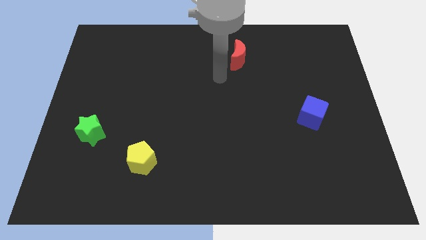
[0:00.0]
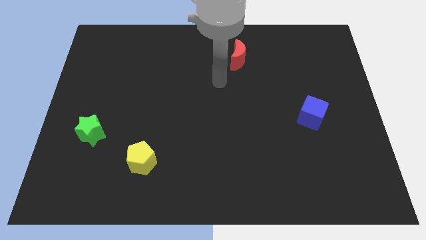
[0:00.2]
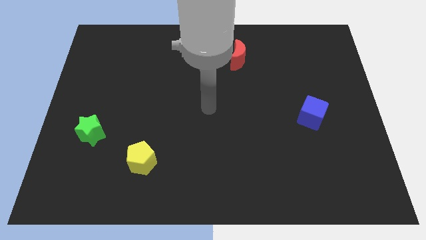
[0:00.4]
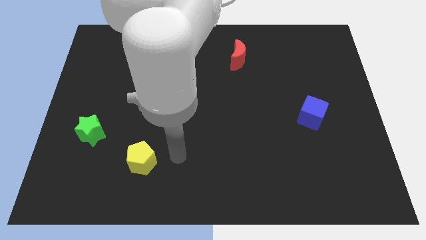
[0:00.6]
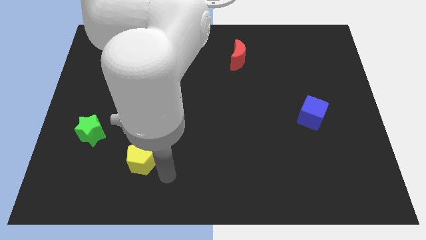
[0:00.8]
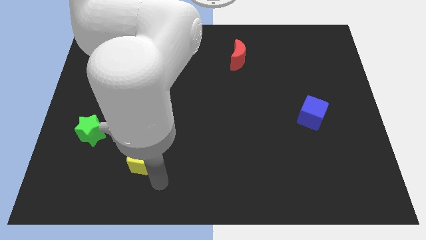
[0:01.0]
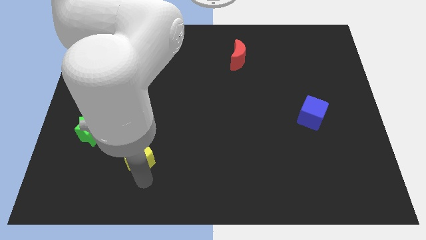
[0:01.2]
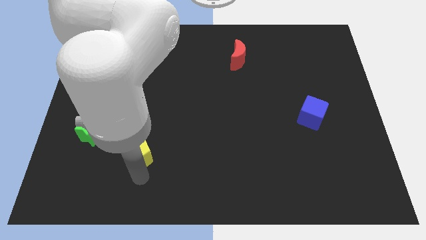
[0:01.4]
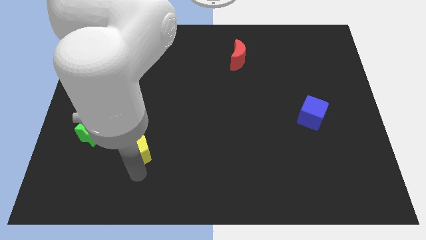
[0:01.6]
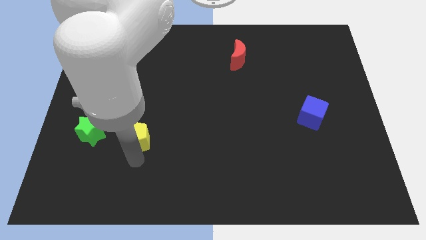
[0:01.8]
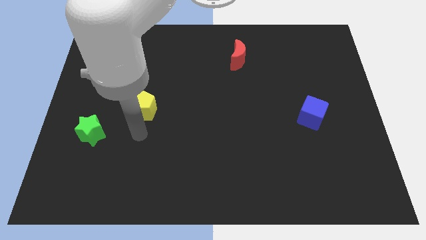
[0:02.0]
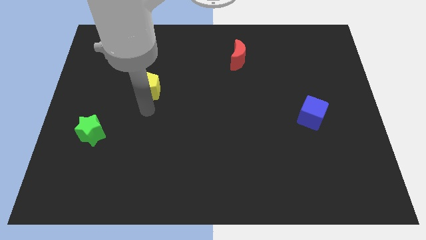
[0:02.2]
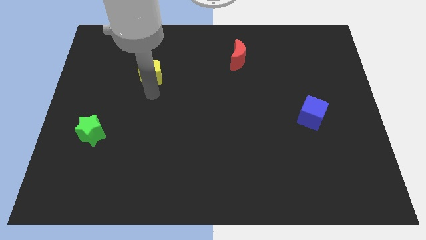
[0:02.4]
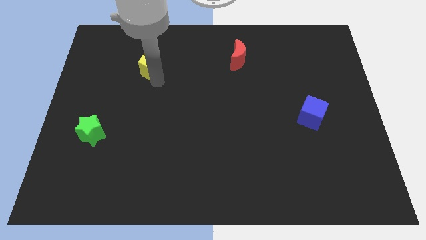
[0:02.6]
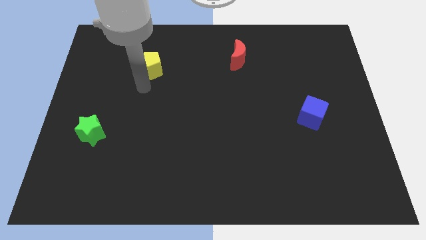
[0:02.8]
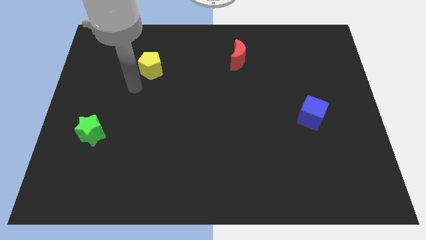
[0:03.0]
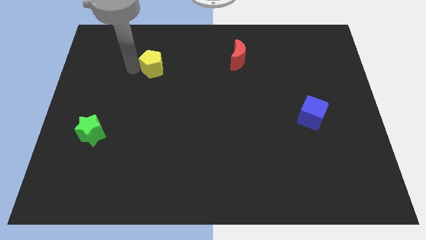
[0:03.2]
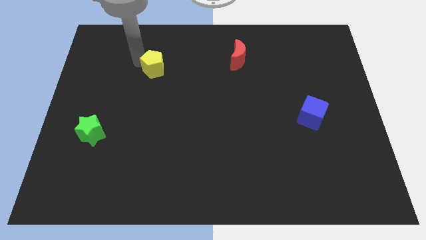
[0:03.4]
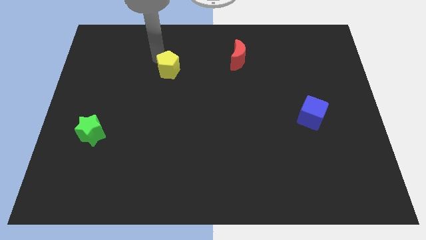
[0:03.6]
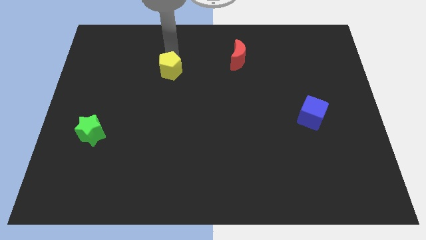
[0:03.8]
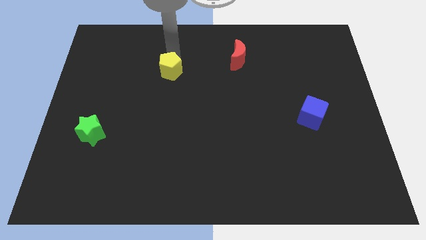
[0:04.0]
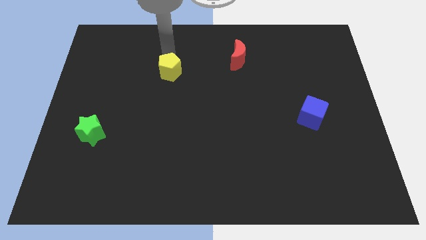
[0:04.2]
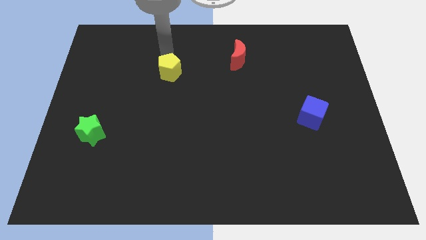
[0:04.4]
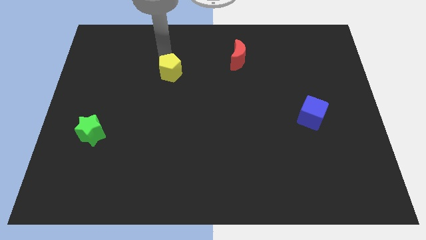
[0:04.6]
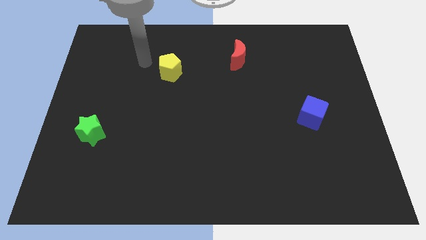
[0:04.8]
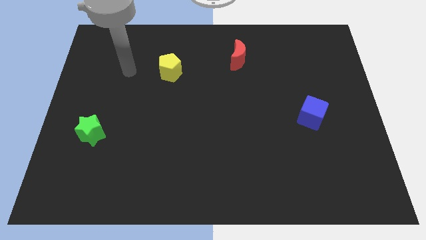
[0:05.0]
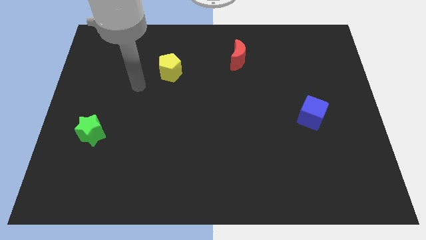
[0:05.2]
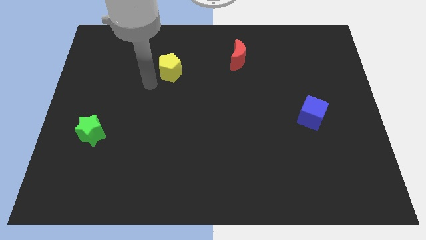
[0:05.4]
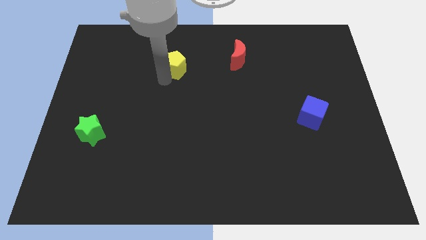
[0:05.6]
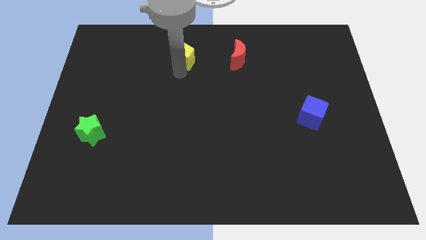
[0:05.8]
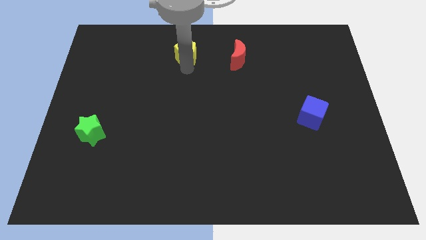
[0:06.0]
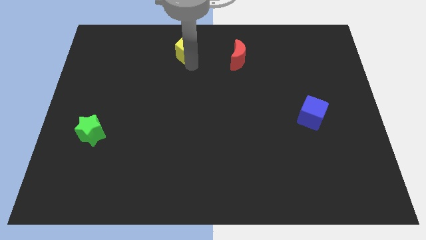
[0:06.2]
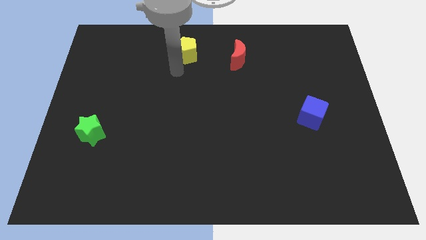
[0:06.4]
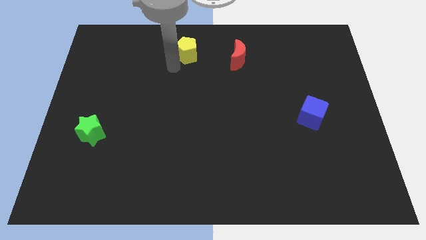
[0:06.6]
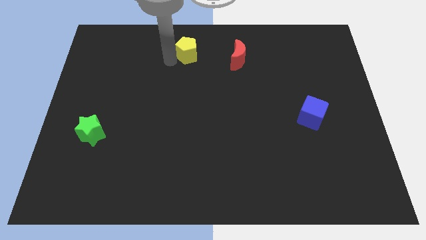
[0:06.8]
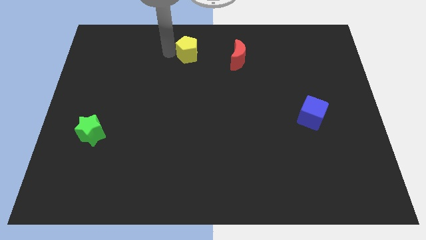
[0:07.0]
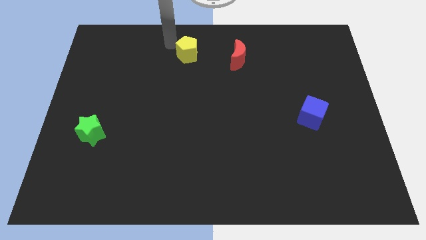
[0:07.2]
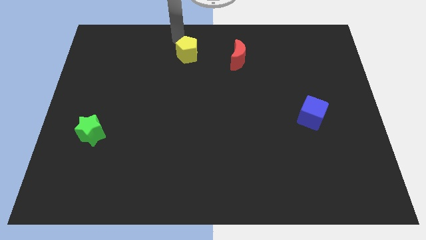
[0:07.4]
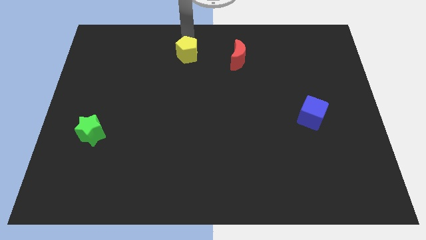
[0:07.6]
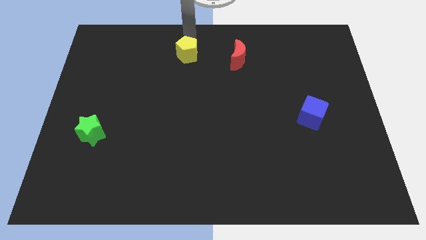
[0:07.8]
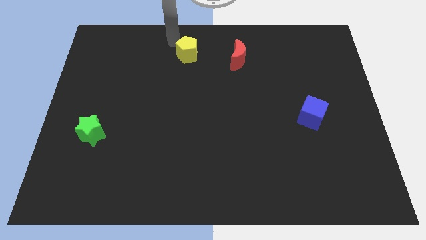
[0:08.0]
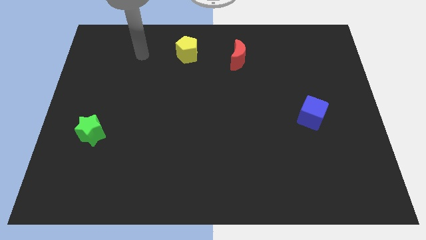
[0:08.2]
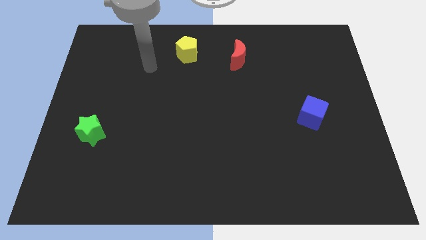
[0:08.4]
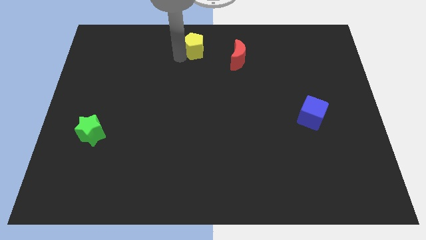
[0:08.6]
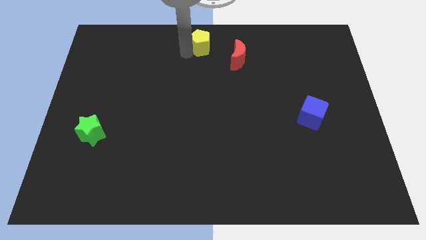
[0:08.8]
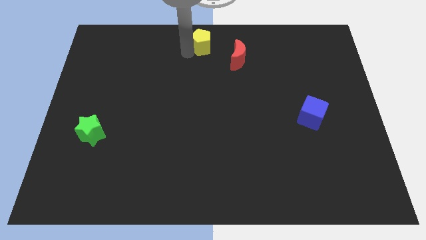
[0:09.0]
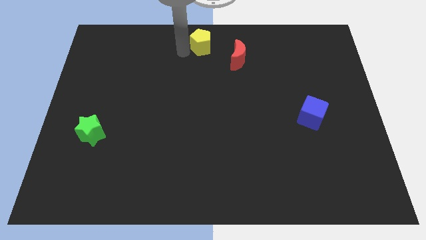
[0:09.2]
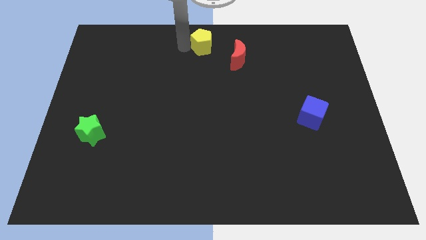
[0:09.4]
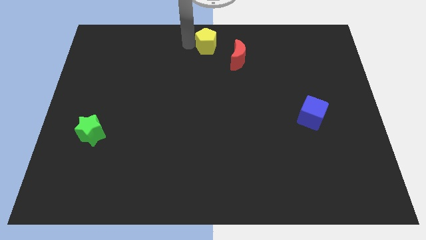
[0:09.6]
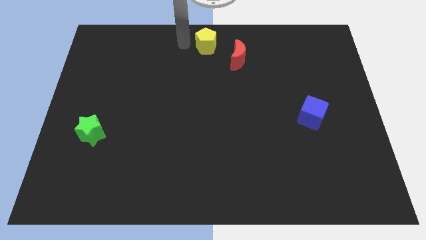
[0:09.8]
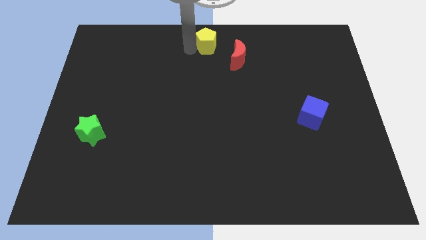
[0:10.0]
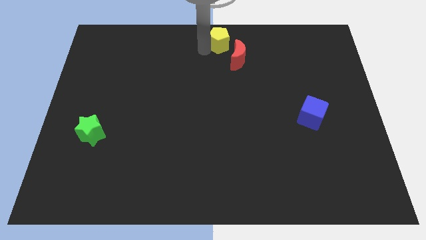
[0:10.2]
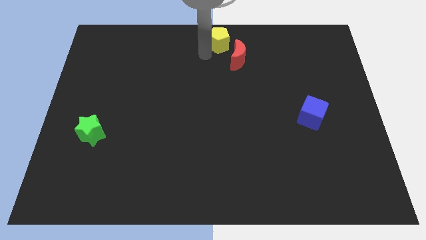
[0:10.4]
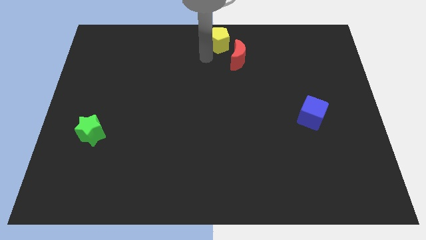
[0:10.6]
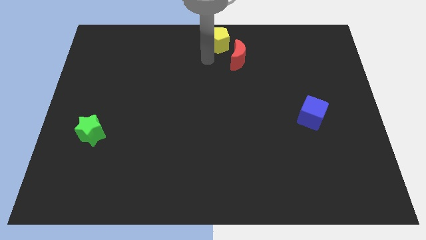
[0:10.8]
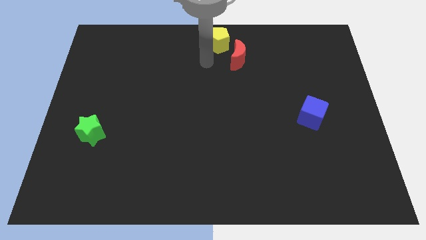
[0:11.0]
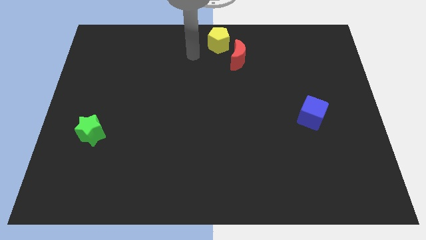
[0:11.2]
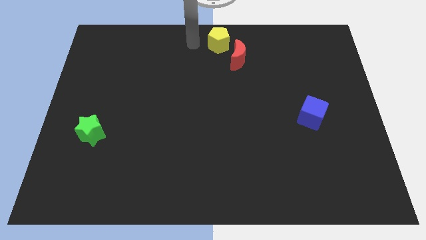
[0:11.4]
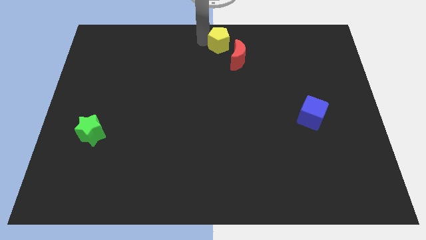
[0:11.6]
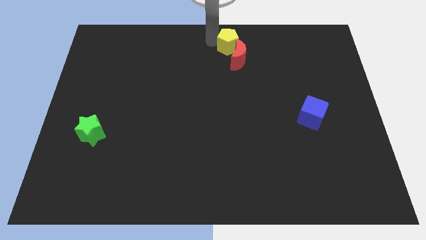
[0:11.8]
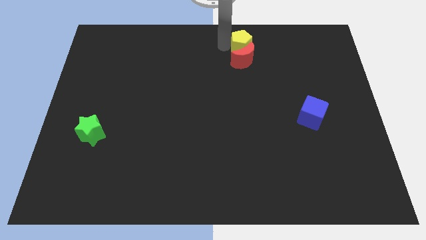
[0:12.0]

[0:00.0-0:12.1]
move the pentagon next to the red block

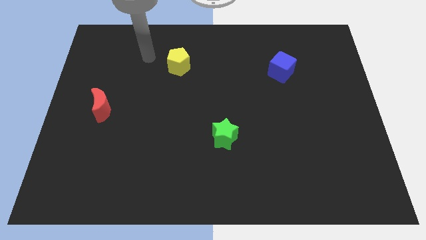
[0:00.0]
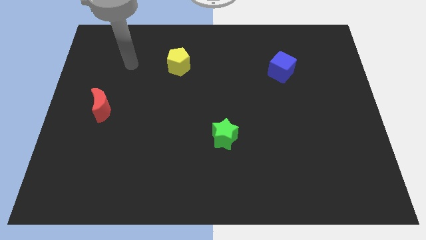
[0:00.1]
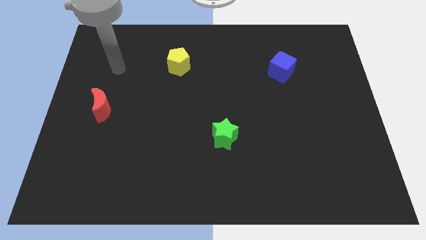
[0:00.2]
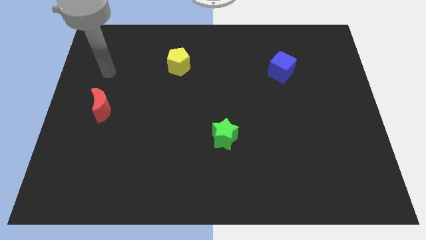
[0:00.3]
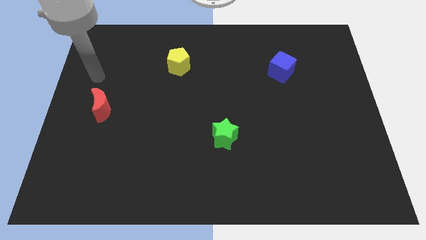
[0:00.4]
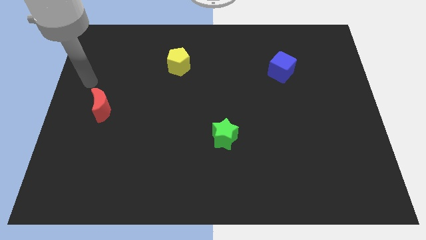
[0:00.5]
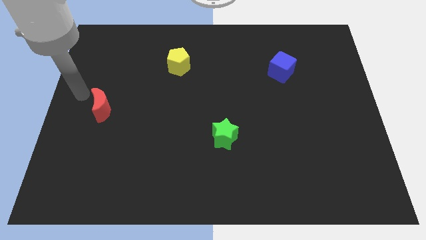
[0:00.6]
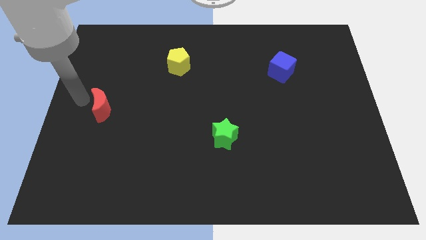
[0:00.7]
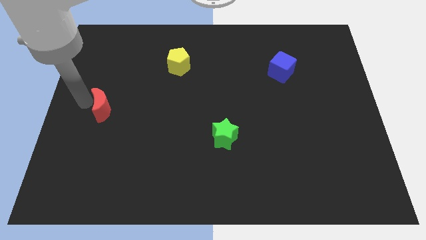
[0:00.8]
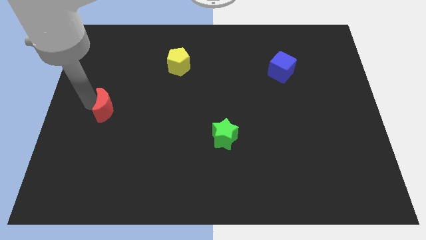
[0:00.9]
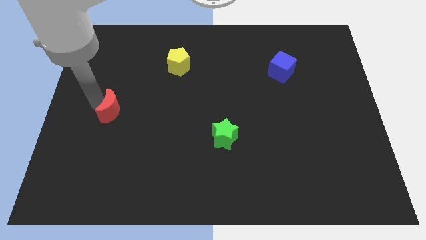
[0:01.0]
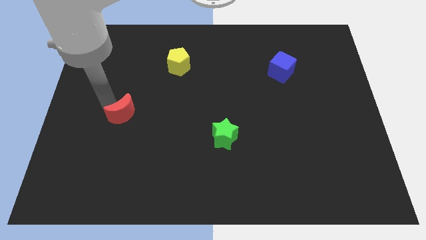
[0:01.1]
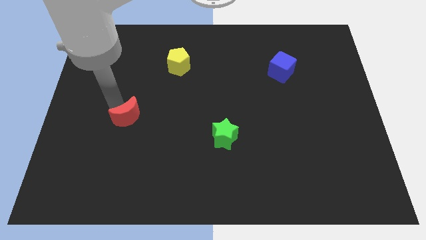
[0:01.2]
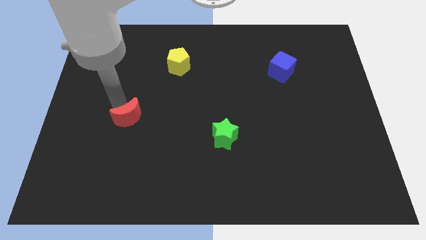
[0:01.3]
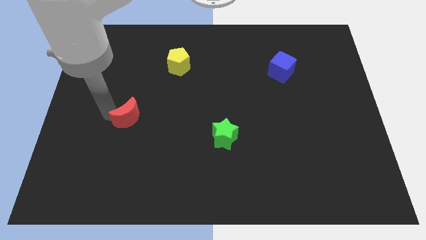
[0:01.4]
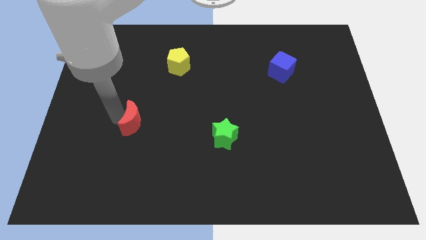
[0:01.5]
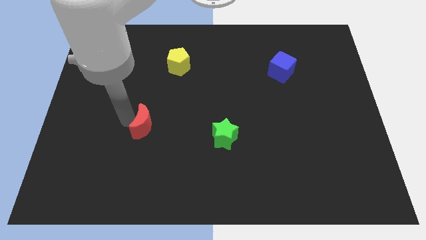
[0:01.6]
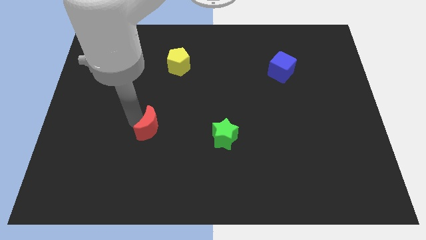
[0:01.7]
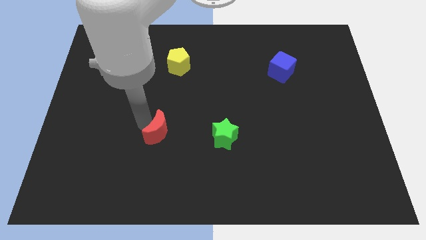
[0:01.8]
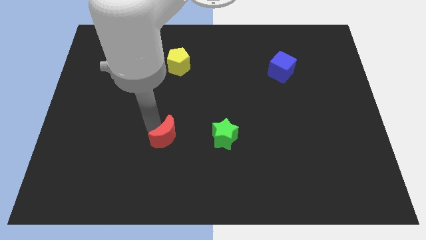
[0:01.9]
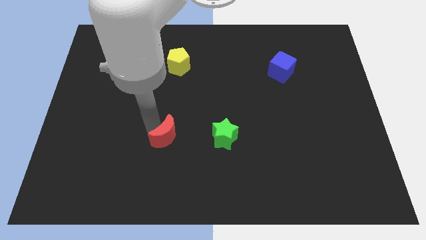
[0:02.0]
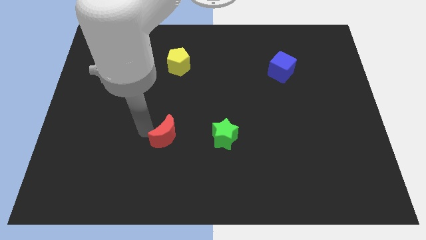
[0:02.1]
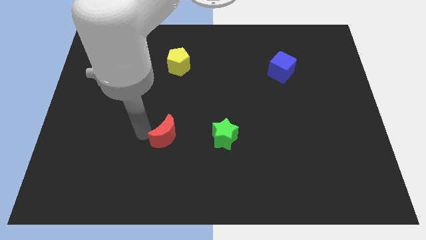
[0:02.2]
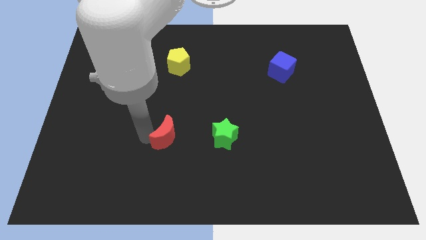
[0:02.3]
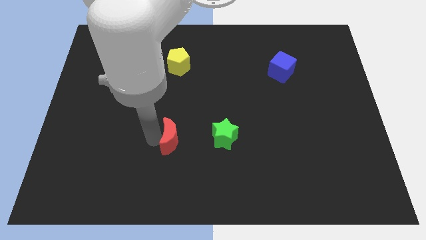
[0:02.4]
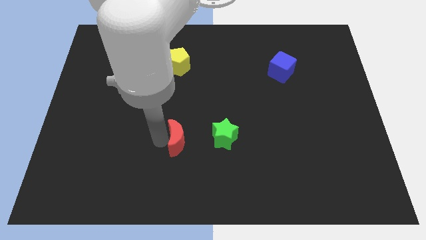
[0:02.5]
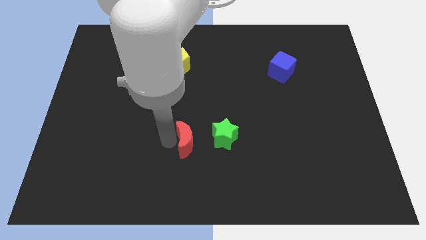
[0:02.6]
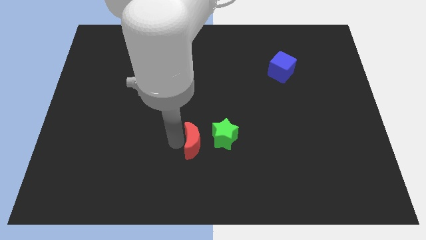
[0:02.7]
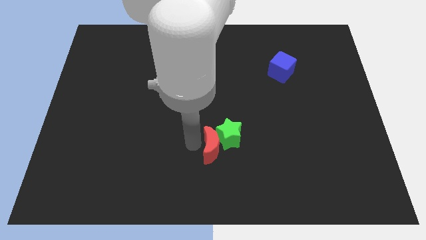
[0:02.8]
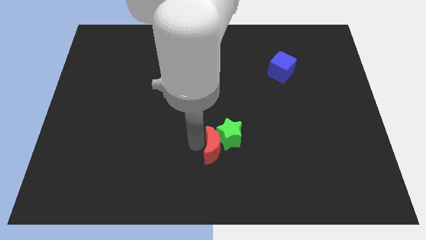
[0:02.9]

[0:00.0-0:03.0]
move the moon towards the green block
